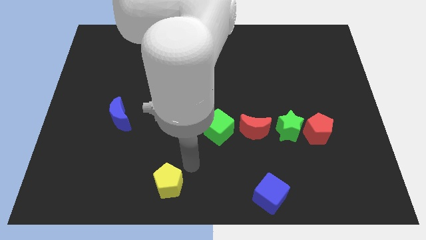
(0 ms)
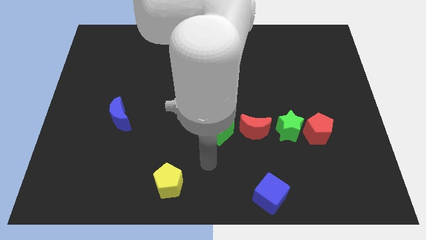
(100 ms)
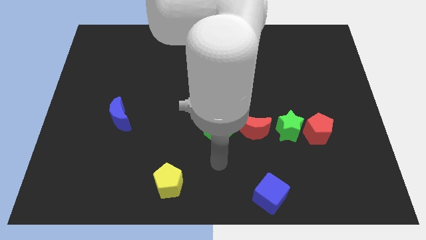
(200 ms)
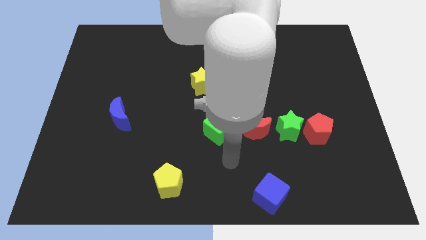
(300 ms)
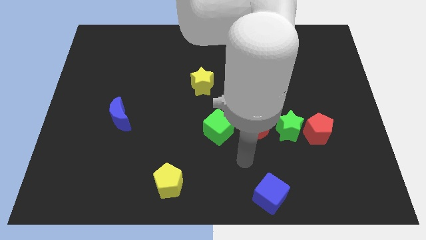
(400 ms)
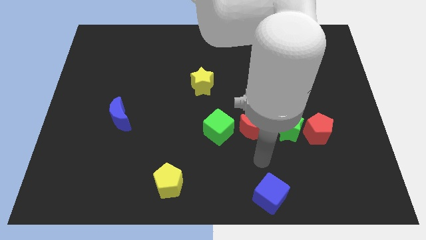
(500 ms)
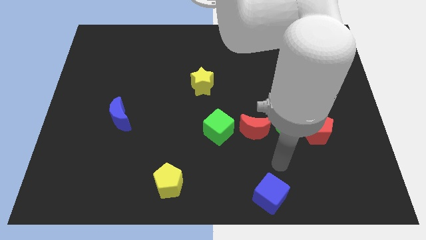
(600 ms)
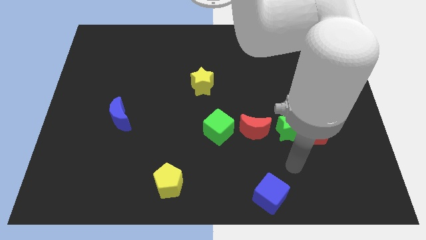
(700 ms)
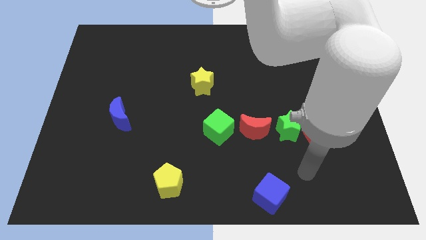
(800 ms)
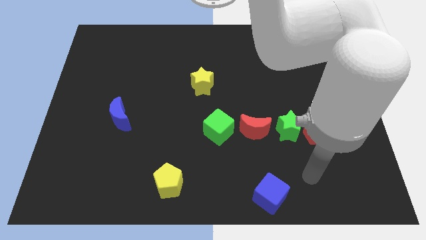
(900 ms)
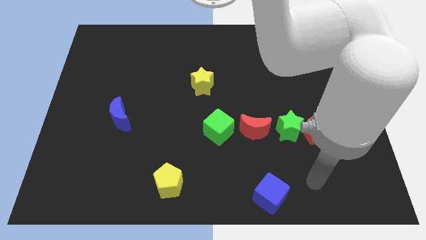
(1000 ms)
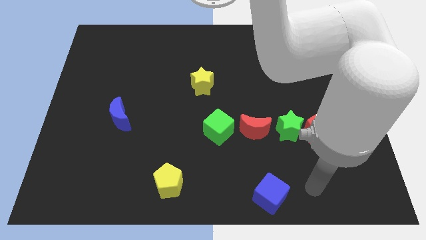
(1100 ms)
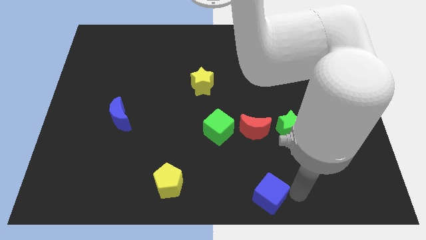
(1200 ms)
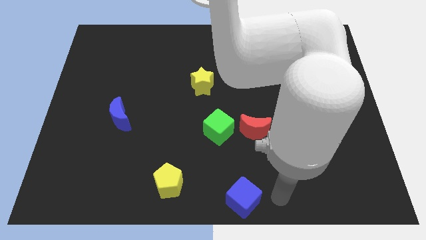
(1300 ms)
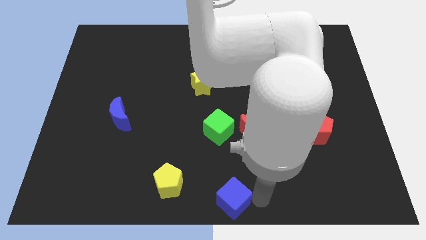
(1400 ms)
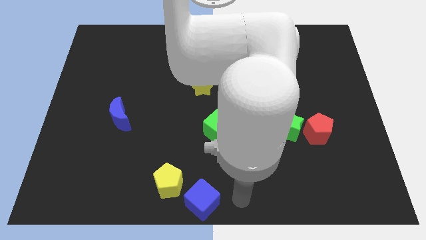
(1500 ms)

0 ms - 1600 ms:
push the blue cube close to the yellow pentagon

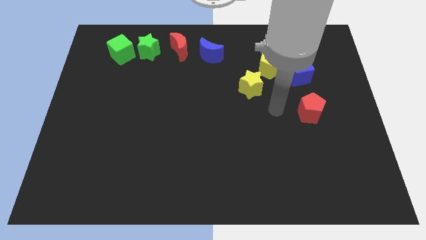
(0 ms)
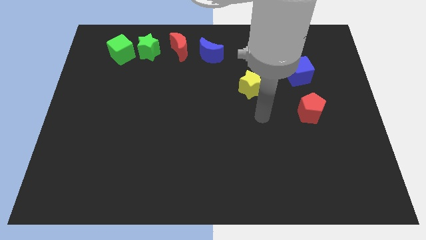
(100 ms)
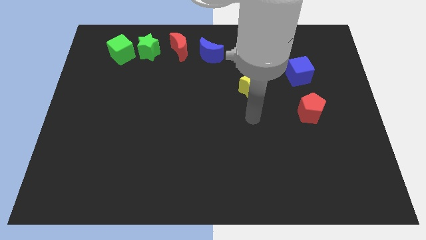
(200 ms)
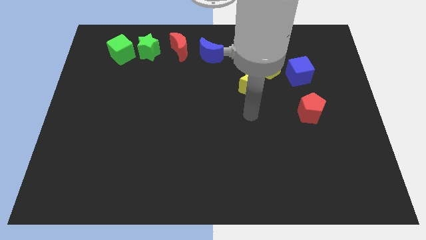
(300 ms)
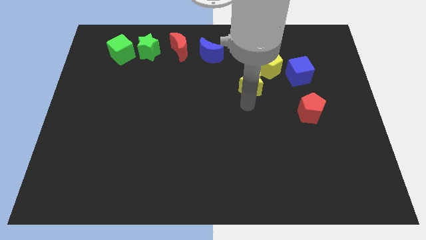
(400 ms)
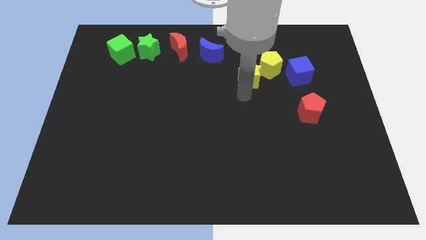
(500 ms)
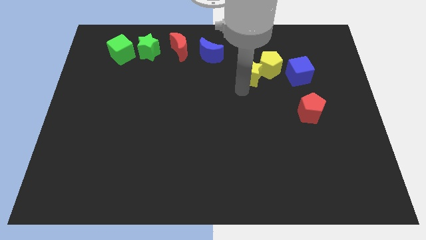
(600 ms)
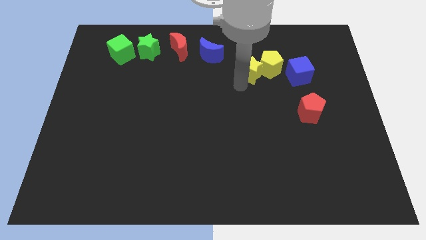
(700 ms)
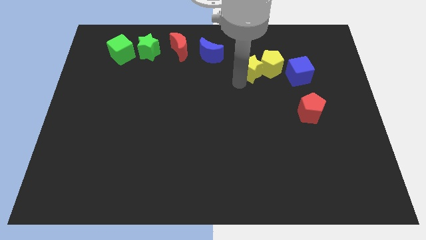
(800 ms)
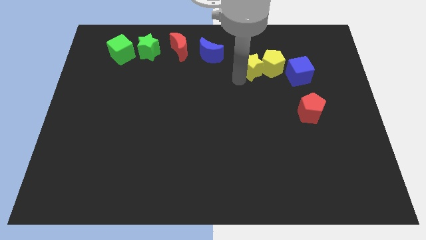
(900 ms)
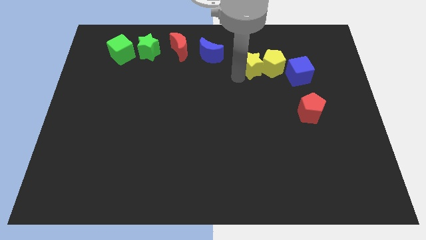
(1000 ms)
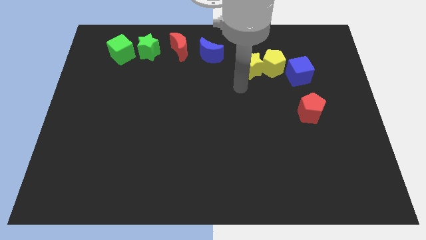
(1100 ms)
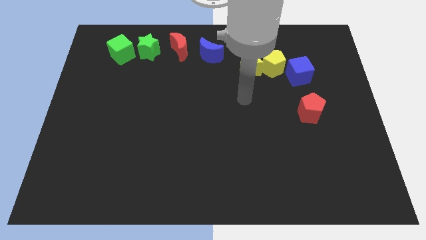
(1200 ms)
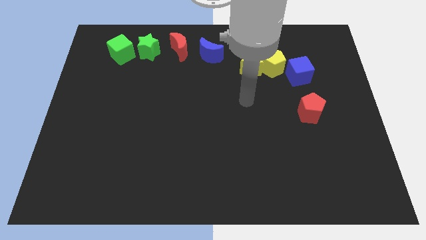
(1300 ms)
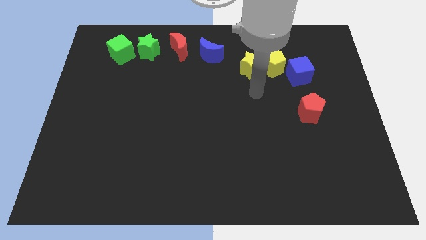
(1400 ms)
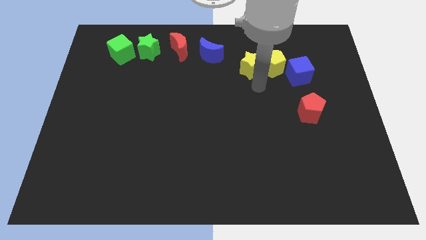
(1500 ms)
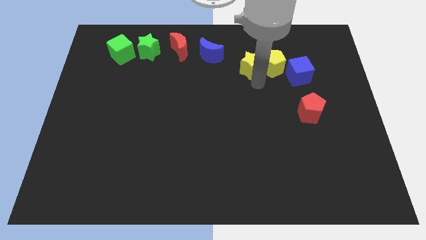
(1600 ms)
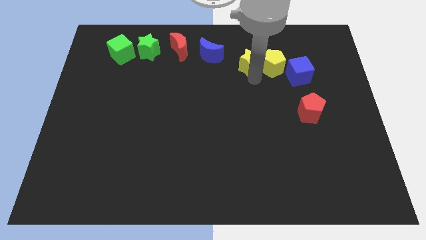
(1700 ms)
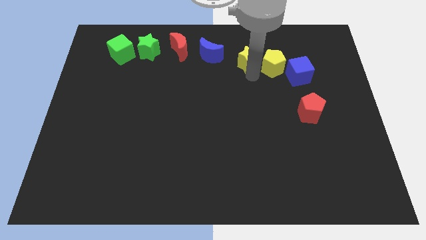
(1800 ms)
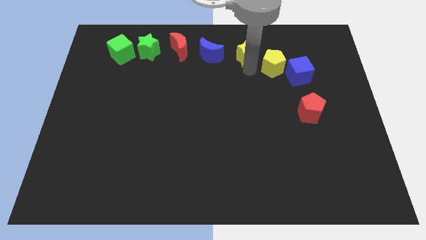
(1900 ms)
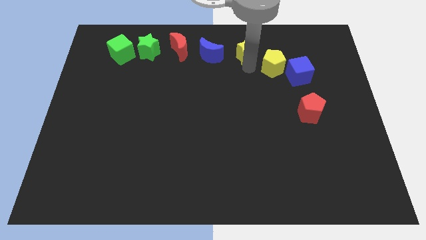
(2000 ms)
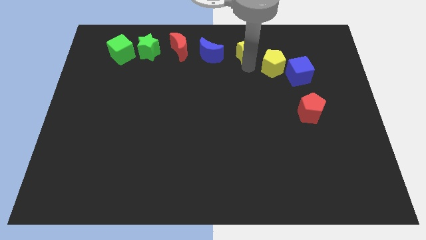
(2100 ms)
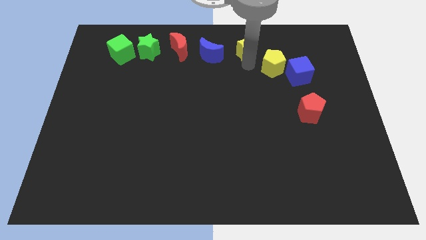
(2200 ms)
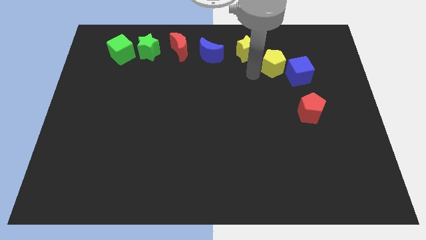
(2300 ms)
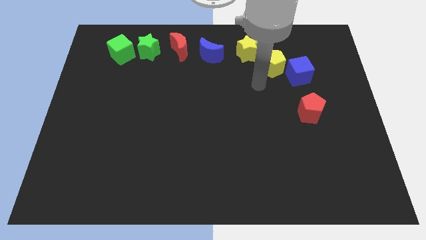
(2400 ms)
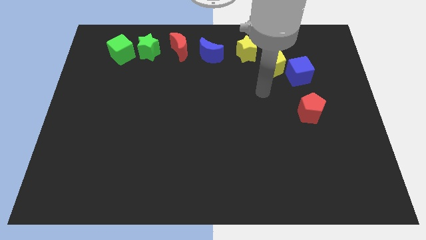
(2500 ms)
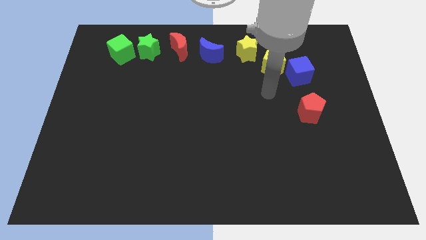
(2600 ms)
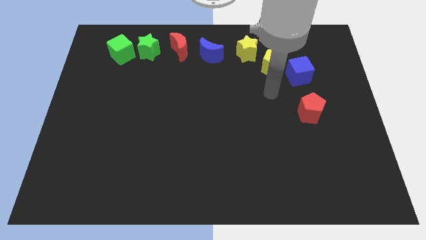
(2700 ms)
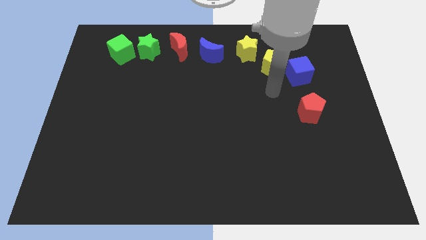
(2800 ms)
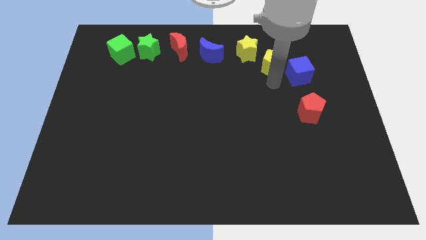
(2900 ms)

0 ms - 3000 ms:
place the yellow star right to the blue moon

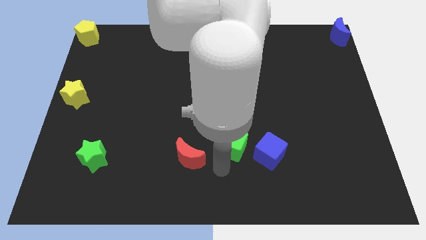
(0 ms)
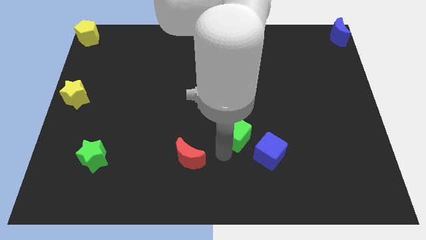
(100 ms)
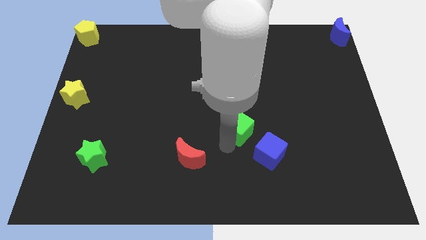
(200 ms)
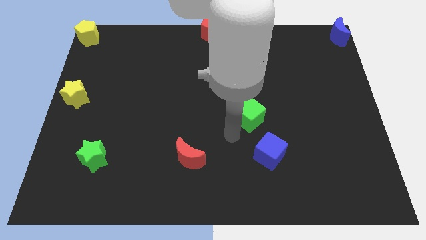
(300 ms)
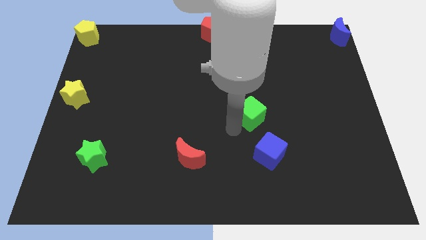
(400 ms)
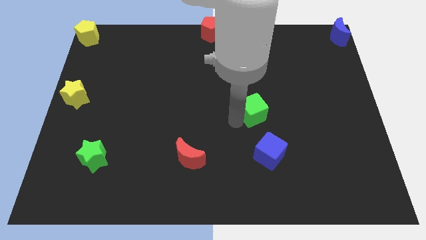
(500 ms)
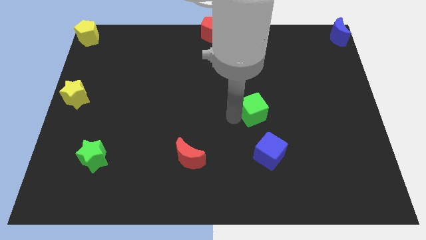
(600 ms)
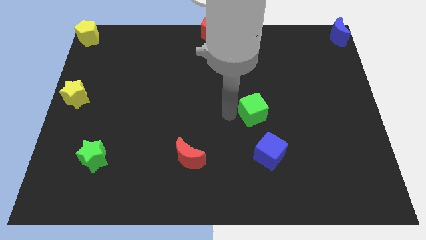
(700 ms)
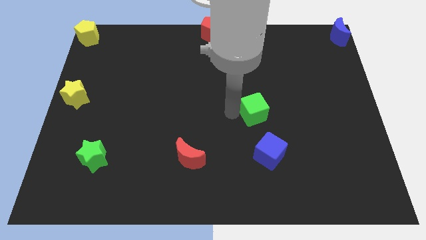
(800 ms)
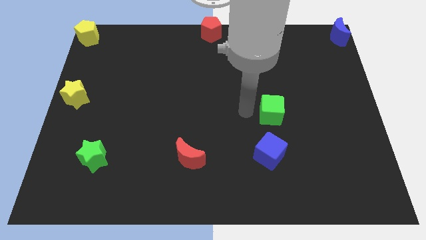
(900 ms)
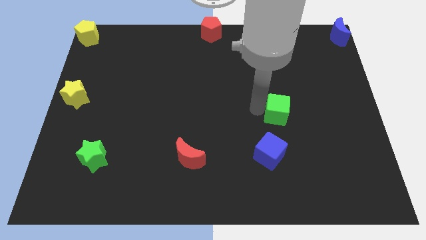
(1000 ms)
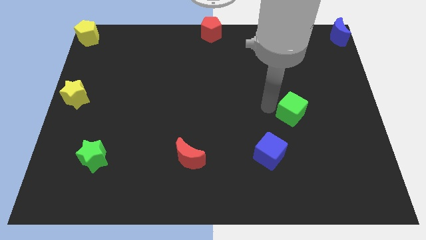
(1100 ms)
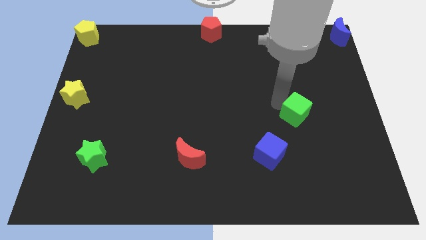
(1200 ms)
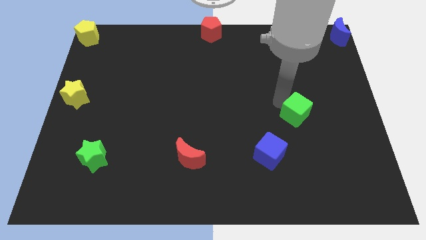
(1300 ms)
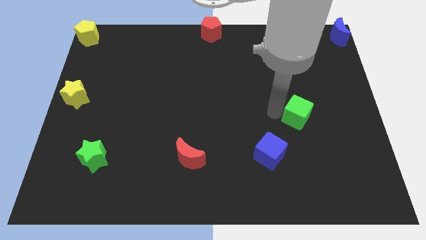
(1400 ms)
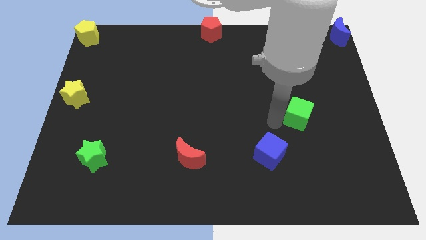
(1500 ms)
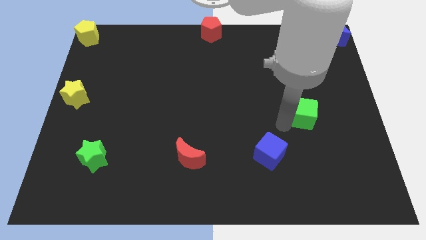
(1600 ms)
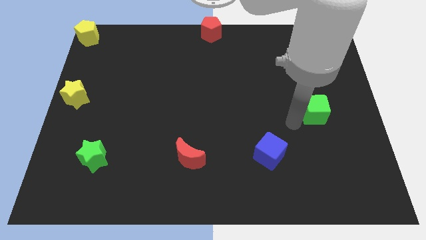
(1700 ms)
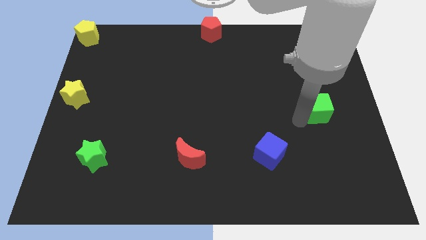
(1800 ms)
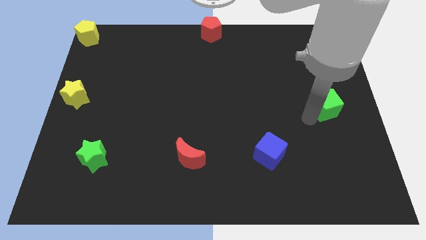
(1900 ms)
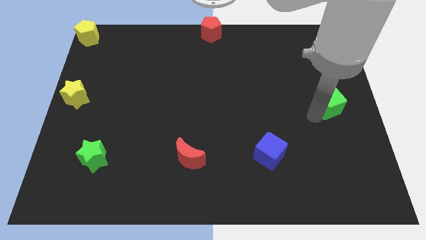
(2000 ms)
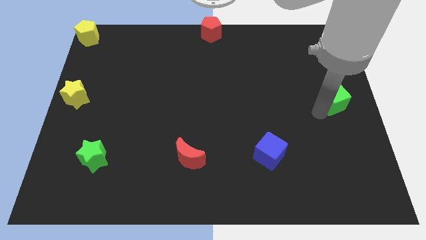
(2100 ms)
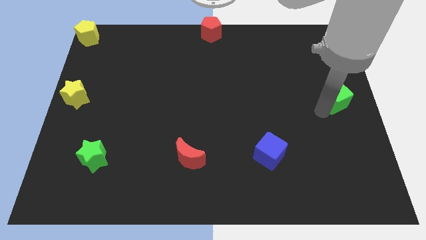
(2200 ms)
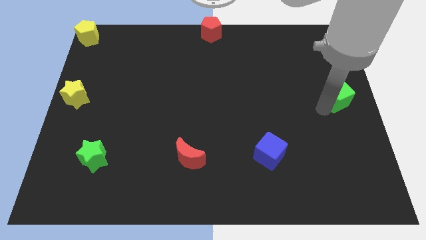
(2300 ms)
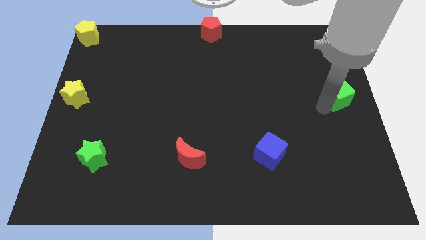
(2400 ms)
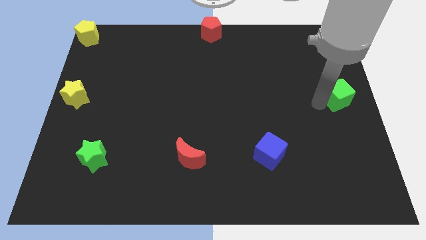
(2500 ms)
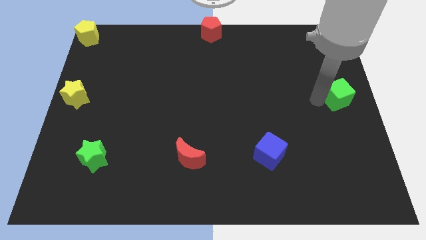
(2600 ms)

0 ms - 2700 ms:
push the green cube diagonally top right to the blue cube

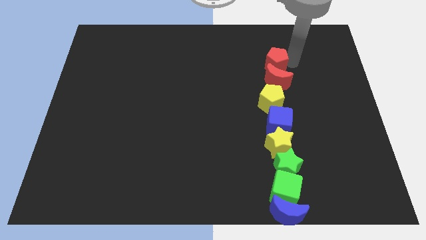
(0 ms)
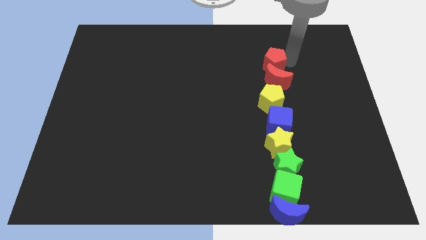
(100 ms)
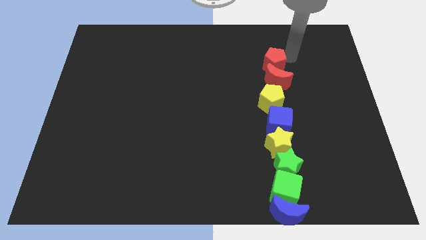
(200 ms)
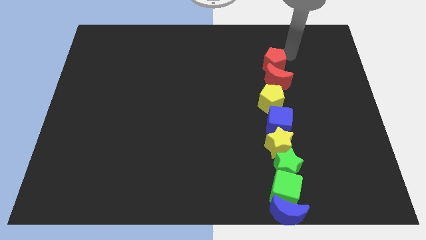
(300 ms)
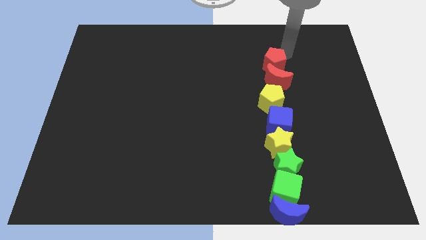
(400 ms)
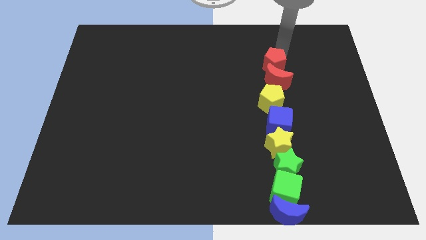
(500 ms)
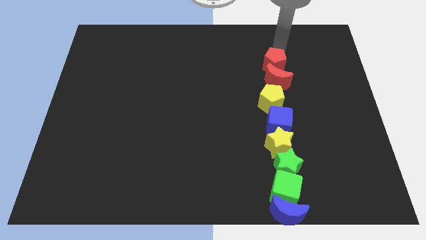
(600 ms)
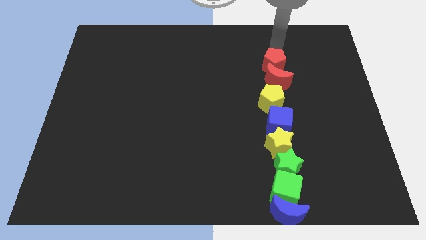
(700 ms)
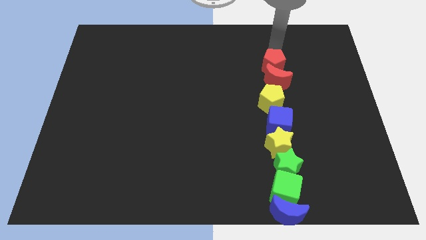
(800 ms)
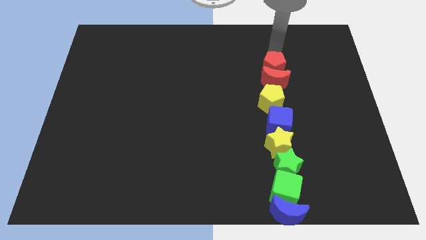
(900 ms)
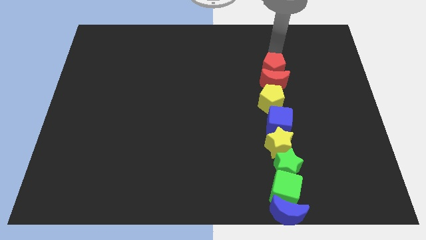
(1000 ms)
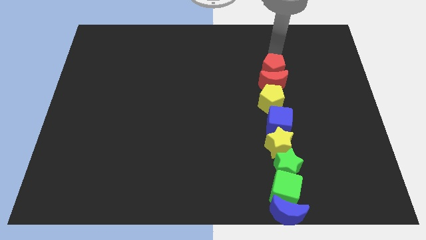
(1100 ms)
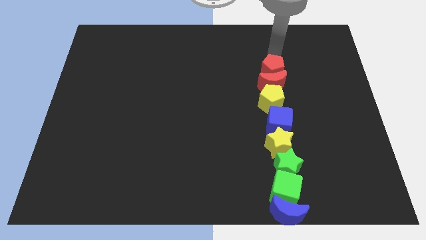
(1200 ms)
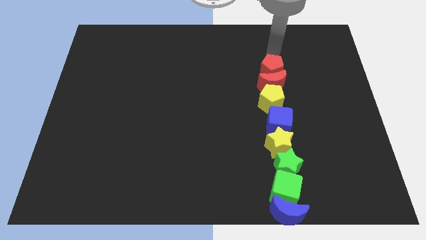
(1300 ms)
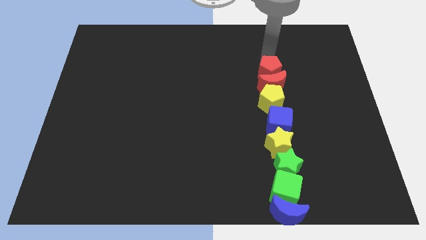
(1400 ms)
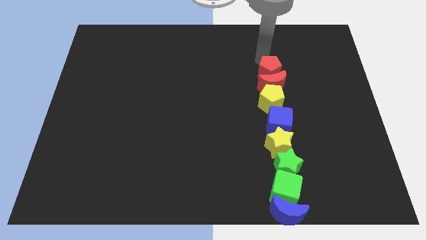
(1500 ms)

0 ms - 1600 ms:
place the red pentagon at the top of the red moon
